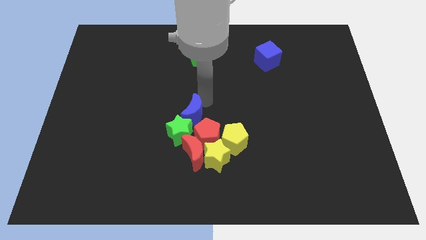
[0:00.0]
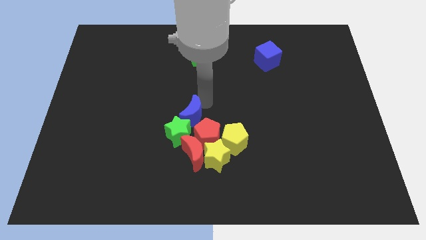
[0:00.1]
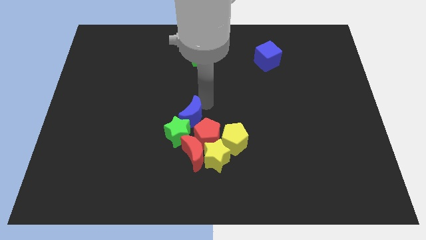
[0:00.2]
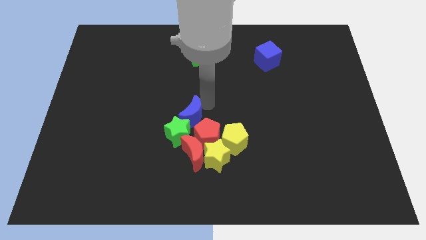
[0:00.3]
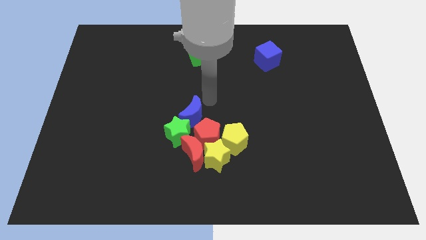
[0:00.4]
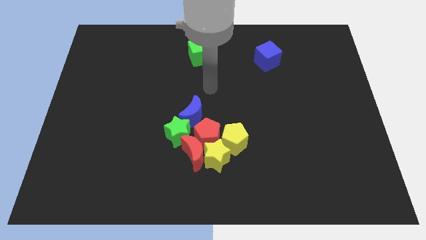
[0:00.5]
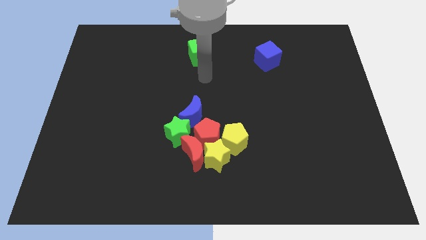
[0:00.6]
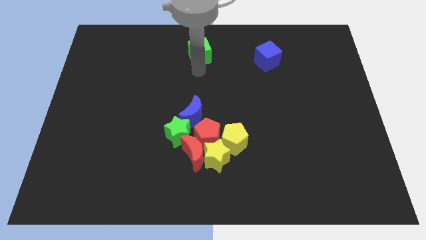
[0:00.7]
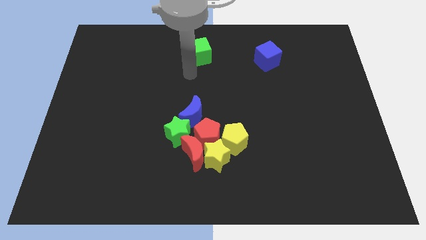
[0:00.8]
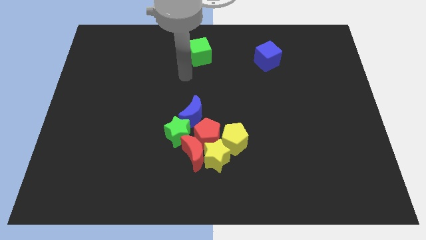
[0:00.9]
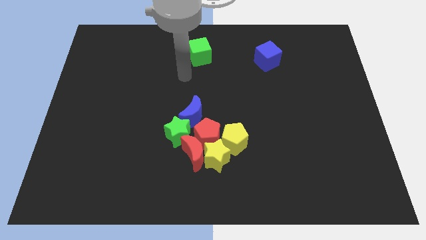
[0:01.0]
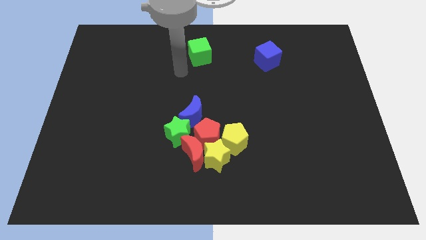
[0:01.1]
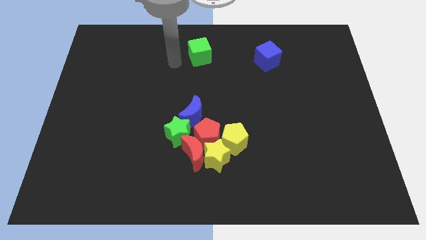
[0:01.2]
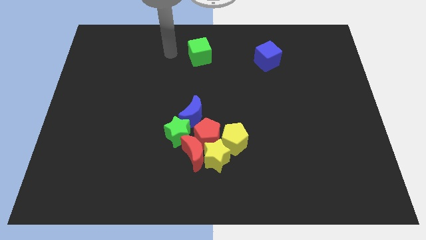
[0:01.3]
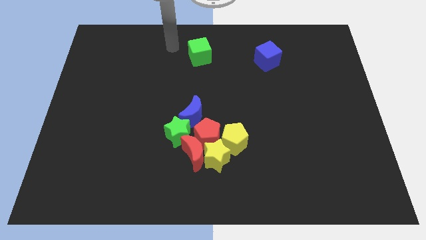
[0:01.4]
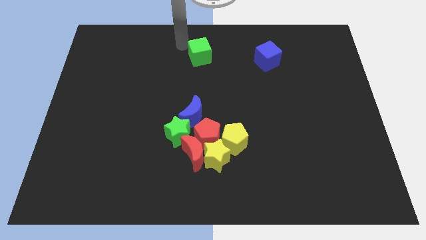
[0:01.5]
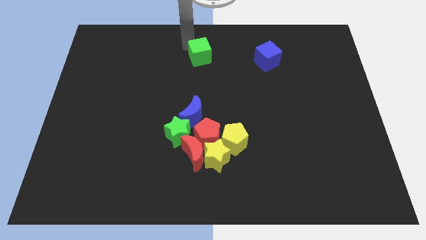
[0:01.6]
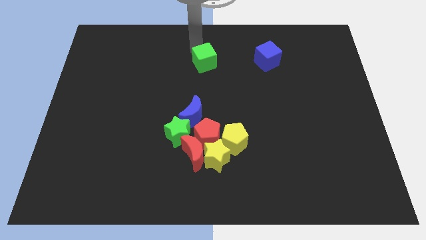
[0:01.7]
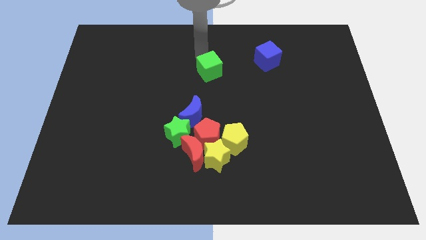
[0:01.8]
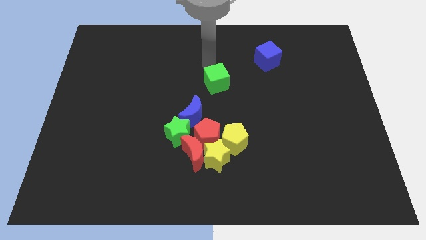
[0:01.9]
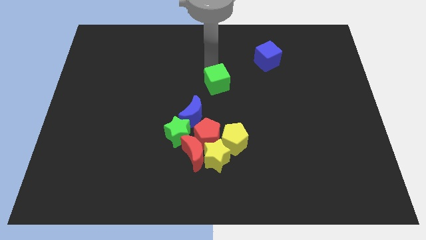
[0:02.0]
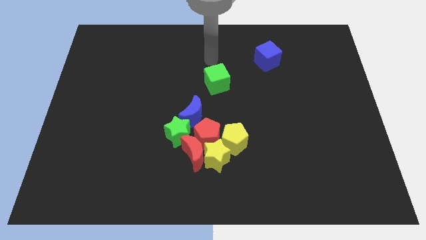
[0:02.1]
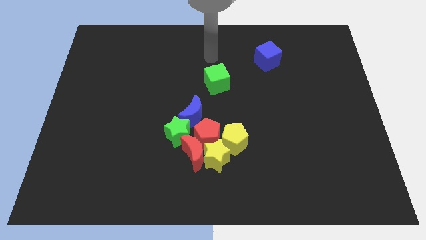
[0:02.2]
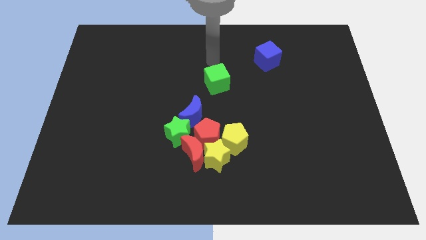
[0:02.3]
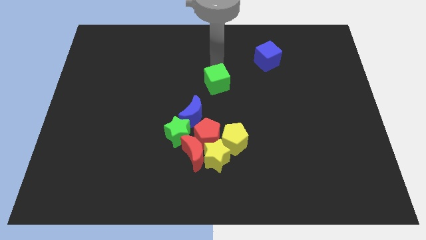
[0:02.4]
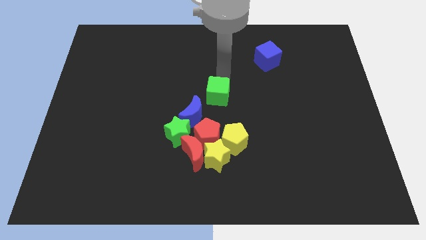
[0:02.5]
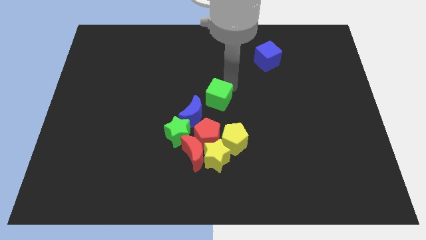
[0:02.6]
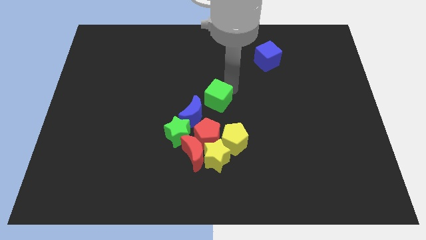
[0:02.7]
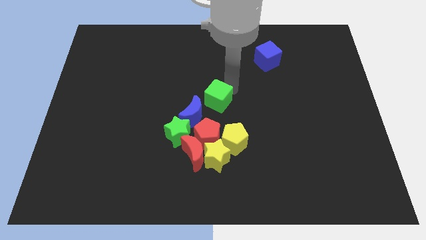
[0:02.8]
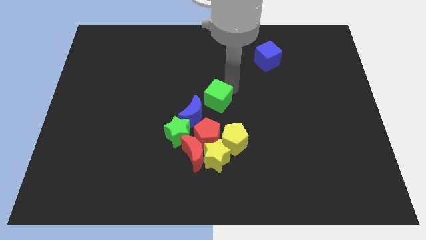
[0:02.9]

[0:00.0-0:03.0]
move the green cube diagonal right to blue moon

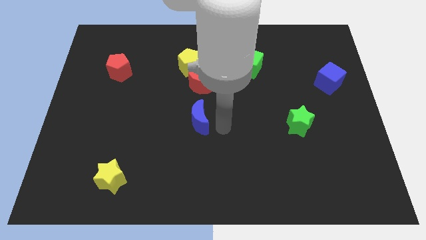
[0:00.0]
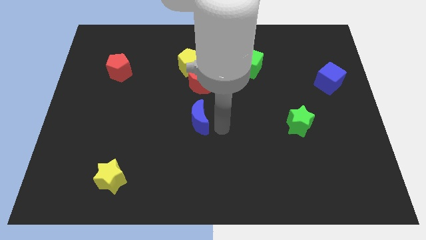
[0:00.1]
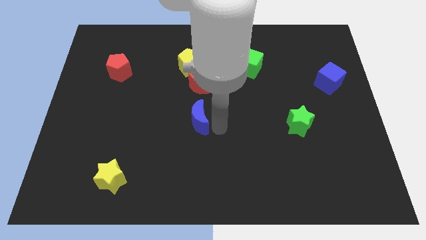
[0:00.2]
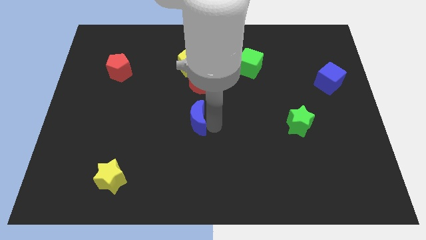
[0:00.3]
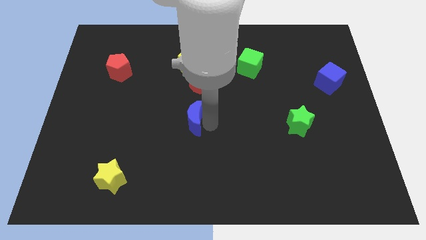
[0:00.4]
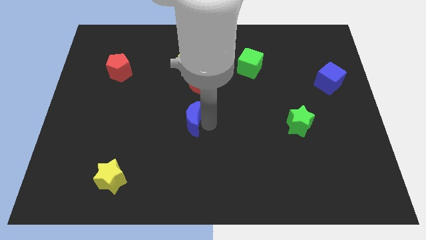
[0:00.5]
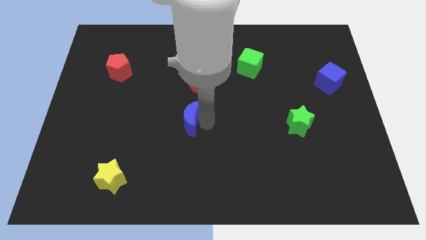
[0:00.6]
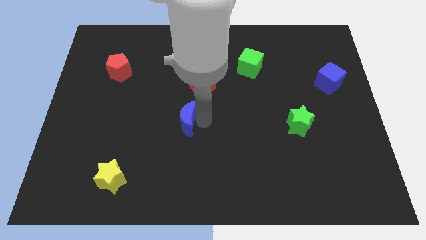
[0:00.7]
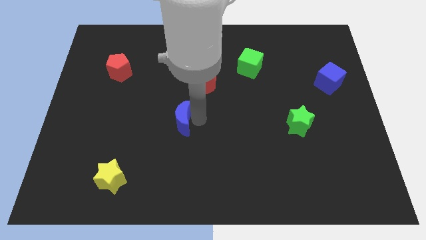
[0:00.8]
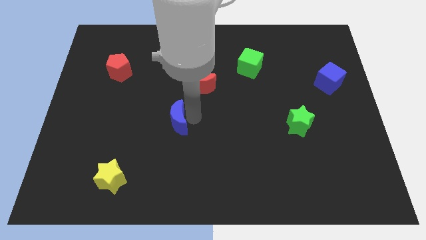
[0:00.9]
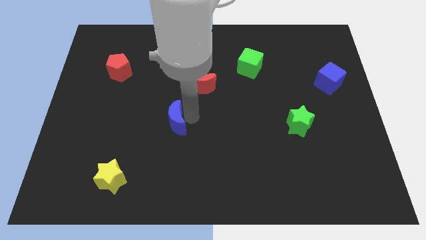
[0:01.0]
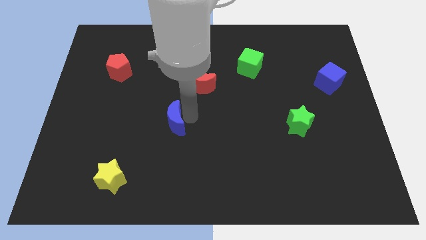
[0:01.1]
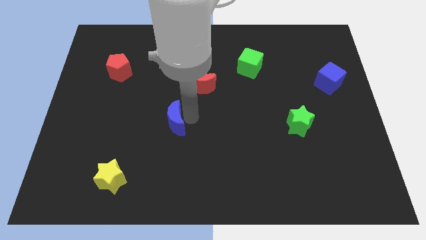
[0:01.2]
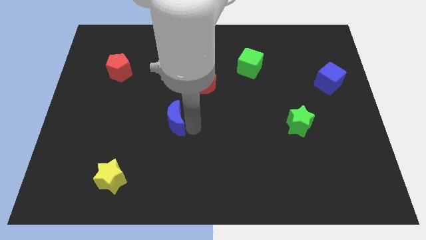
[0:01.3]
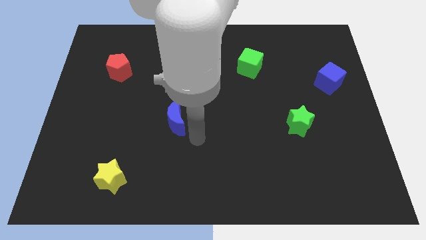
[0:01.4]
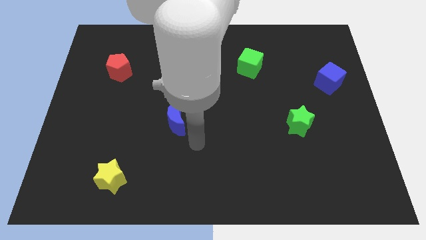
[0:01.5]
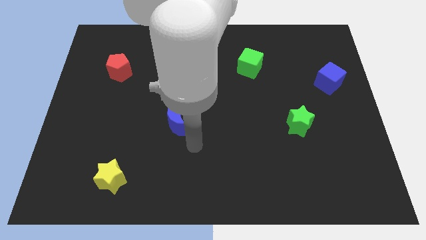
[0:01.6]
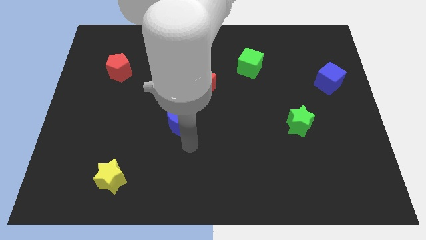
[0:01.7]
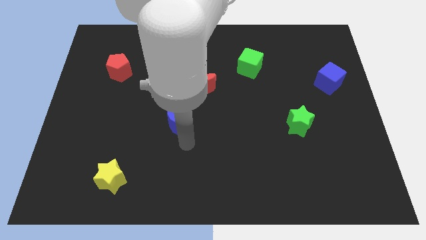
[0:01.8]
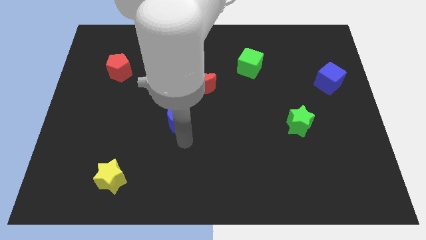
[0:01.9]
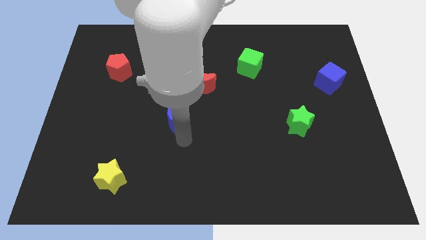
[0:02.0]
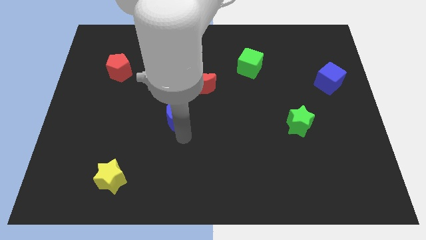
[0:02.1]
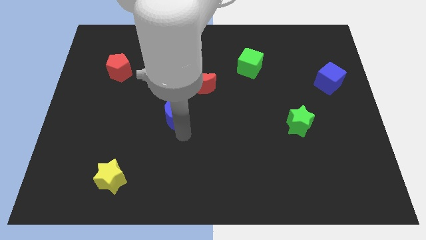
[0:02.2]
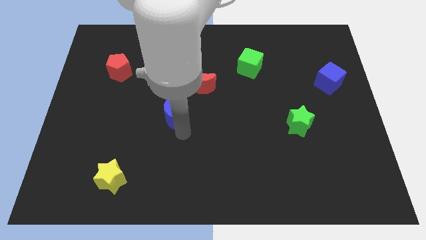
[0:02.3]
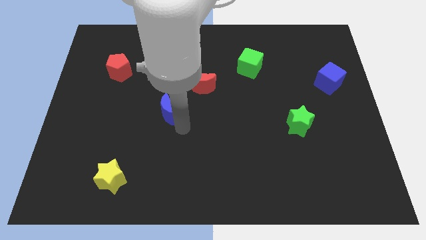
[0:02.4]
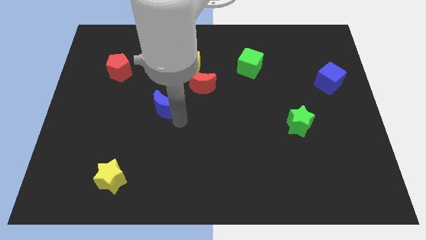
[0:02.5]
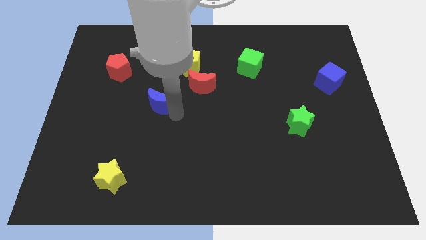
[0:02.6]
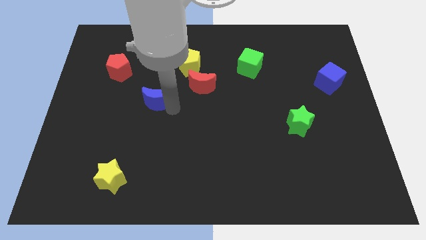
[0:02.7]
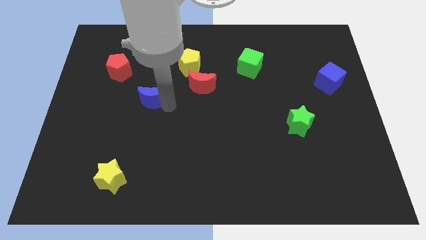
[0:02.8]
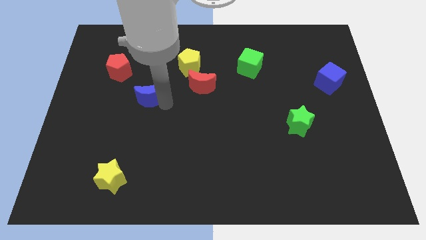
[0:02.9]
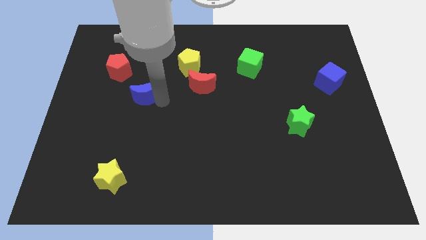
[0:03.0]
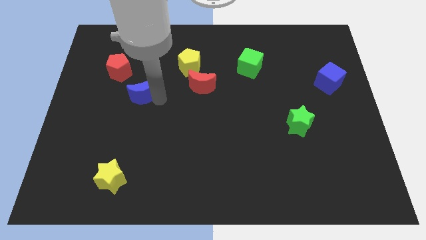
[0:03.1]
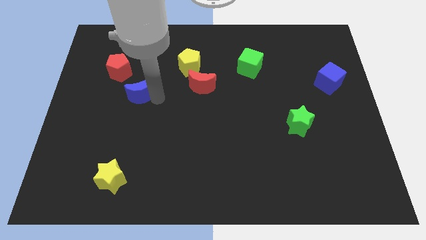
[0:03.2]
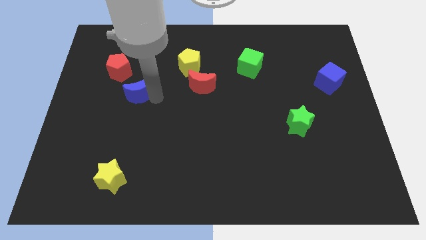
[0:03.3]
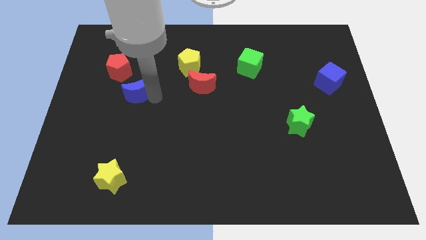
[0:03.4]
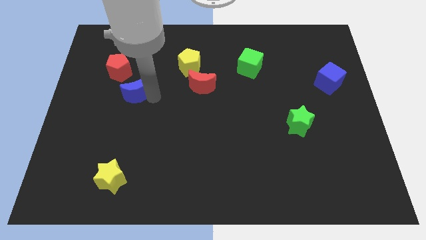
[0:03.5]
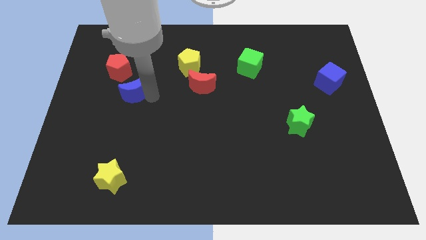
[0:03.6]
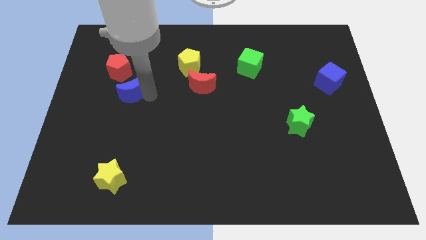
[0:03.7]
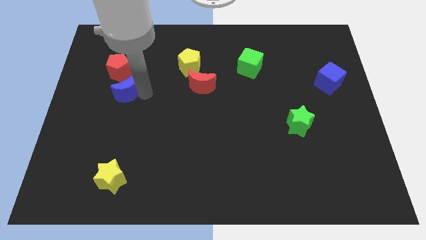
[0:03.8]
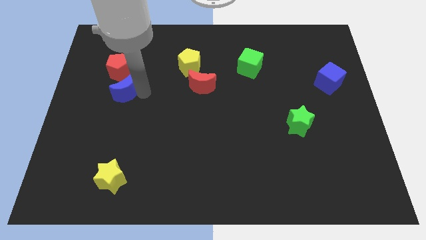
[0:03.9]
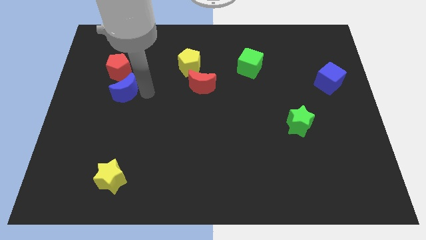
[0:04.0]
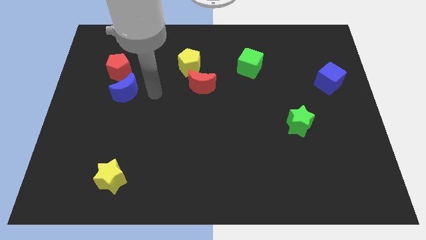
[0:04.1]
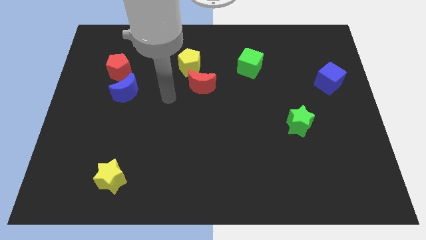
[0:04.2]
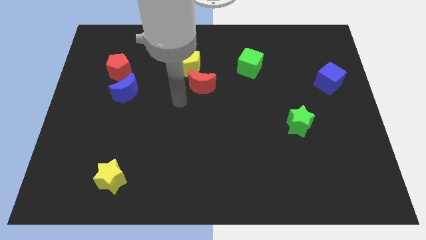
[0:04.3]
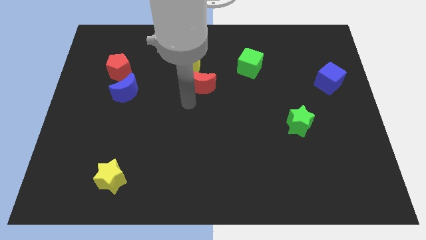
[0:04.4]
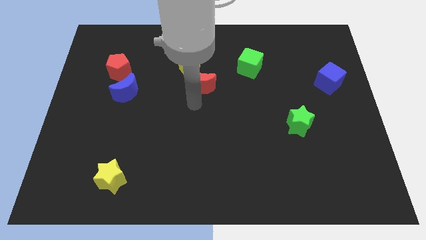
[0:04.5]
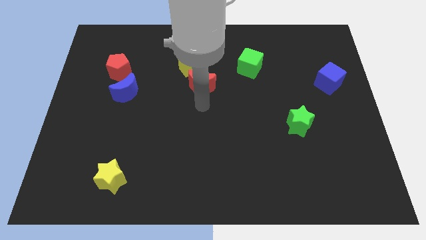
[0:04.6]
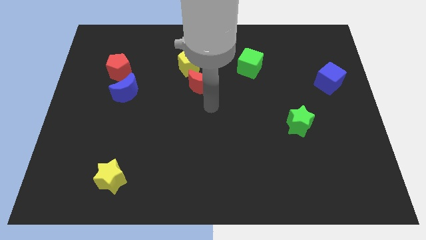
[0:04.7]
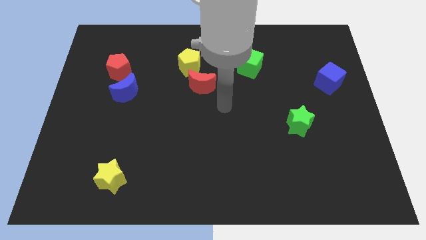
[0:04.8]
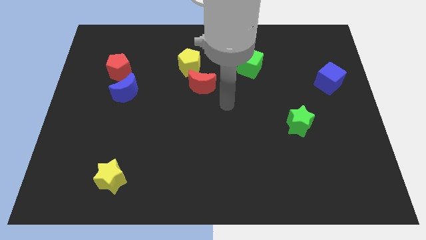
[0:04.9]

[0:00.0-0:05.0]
place the blue moon below the red pentagon

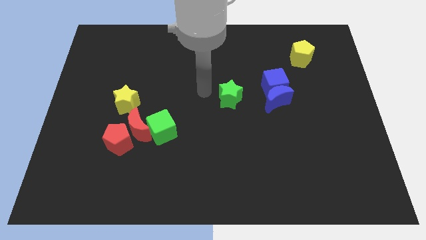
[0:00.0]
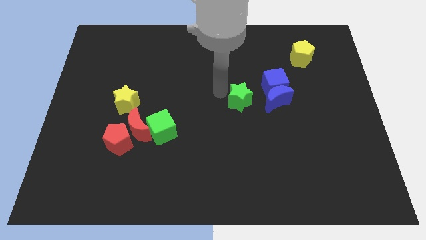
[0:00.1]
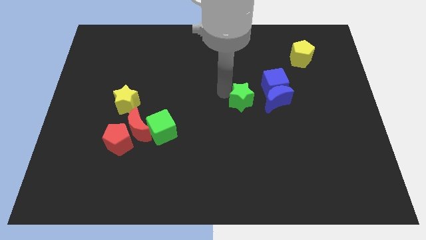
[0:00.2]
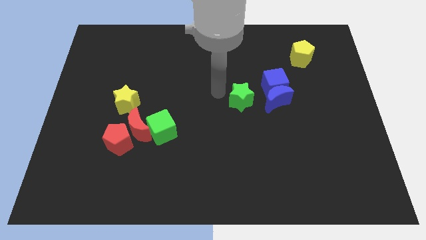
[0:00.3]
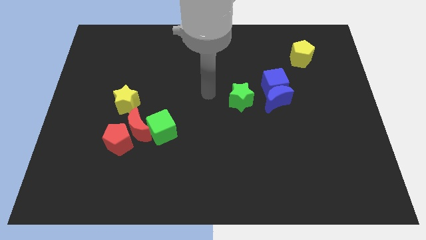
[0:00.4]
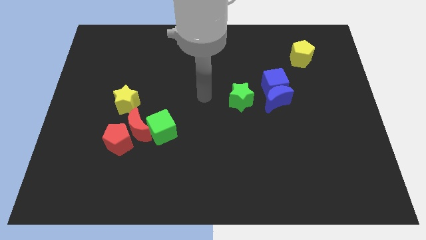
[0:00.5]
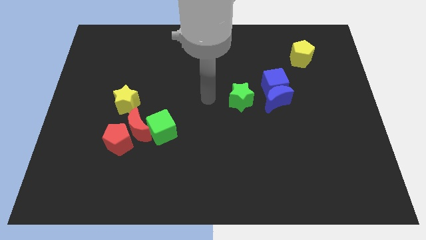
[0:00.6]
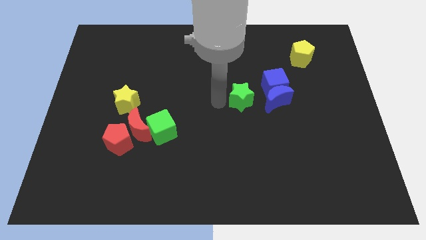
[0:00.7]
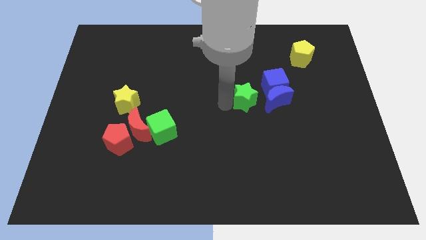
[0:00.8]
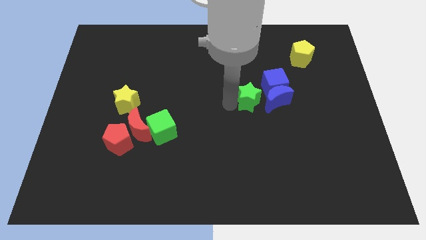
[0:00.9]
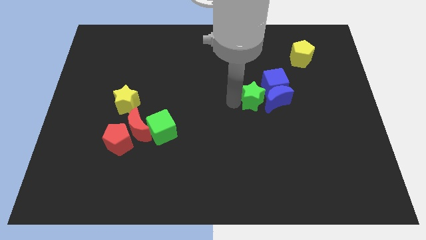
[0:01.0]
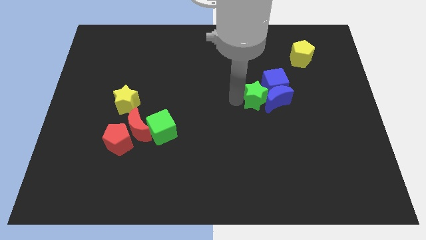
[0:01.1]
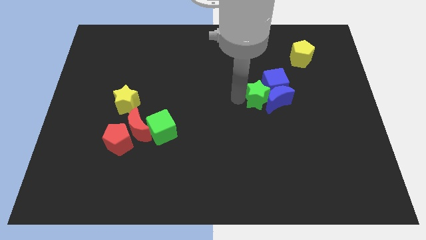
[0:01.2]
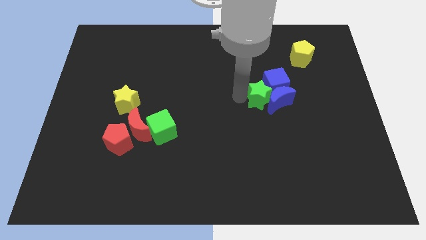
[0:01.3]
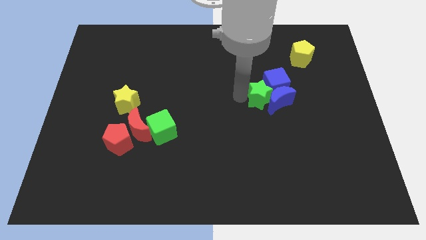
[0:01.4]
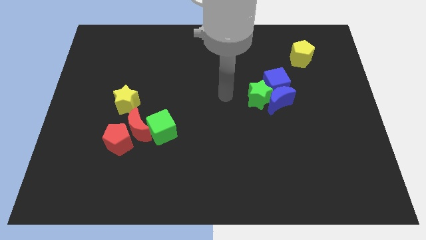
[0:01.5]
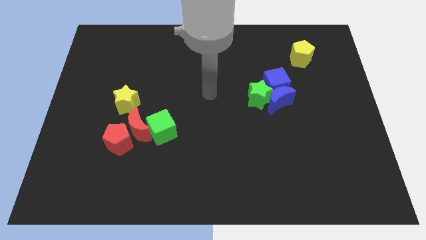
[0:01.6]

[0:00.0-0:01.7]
push the green star into the blue blocks
